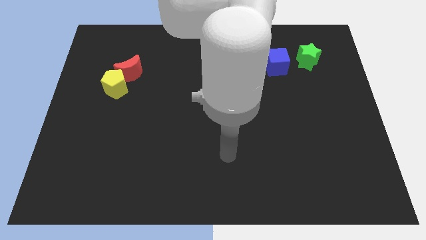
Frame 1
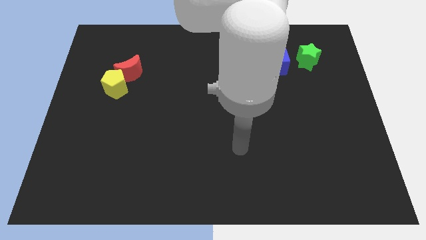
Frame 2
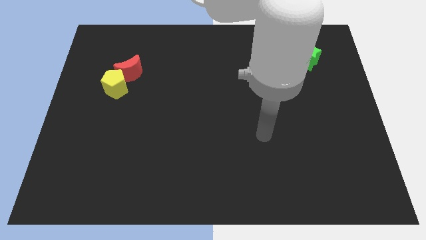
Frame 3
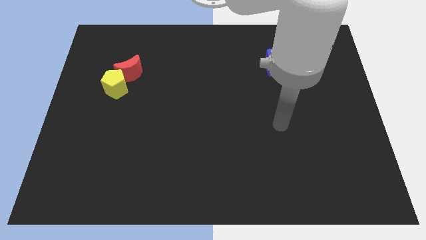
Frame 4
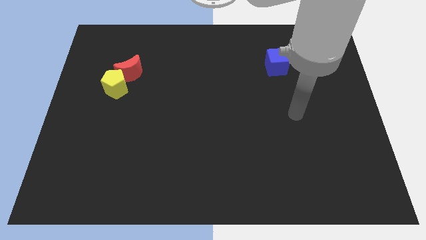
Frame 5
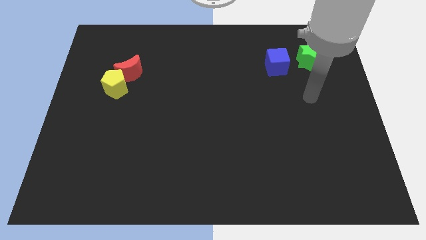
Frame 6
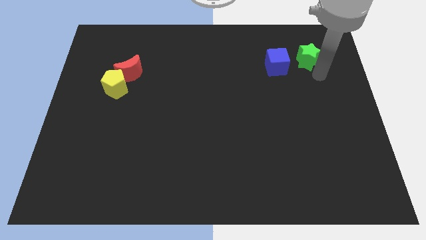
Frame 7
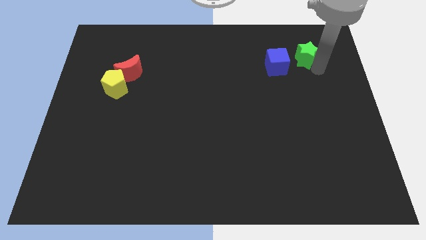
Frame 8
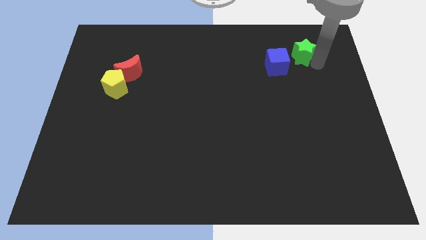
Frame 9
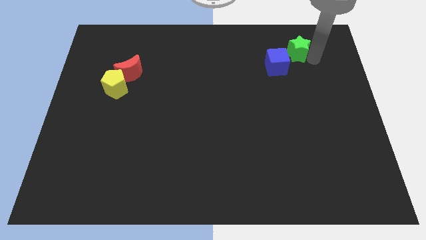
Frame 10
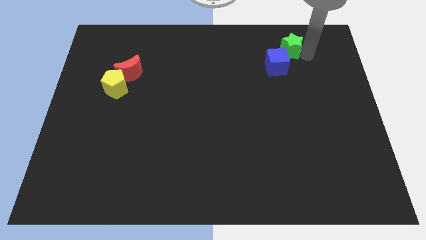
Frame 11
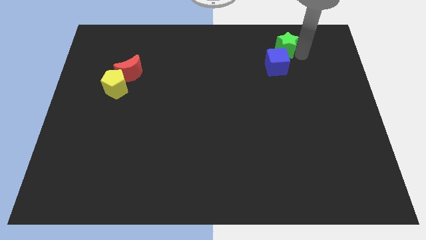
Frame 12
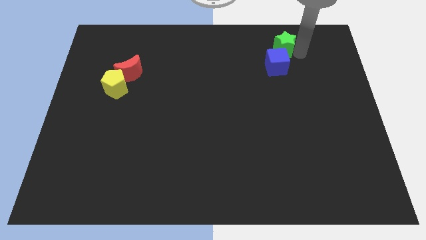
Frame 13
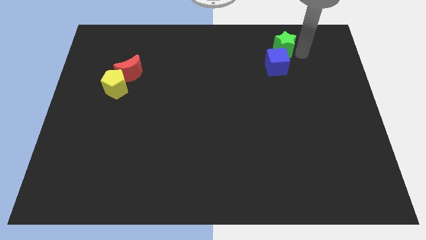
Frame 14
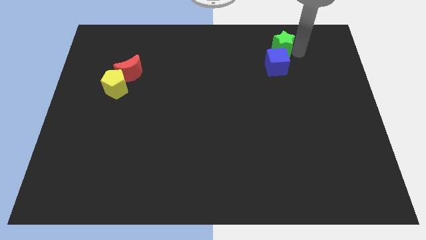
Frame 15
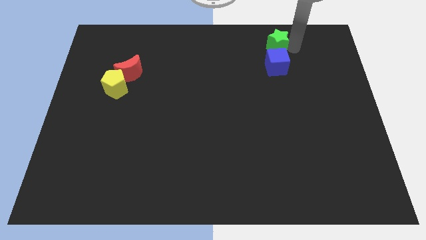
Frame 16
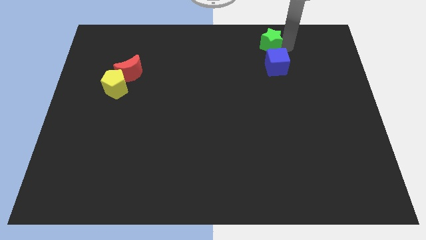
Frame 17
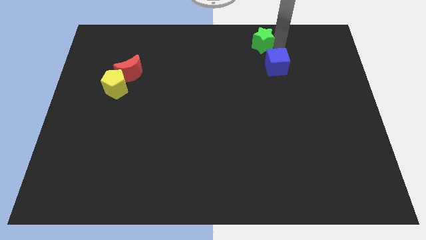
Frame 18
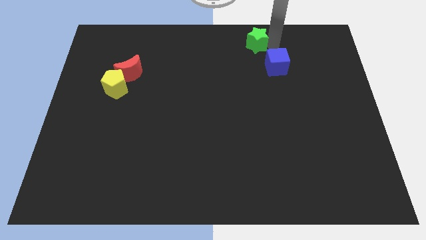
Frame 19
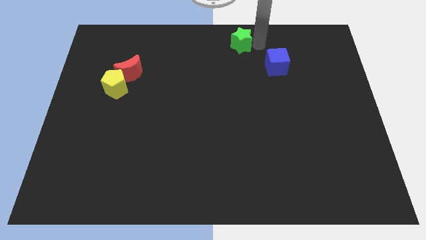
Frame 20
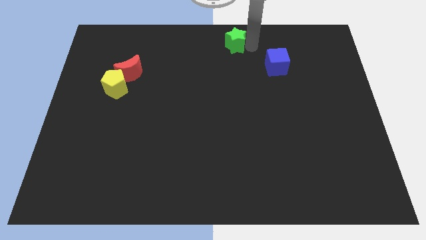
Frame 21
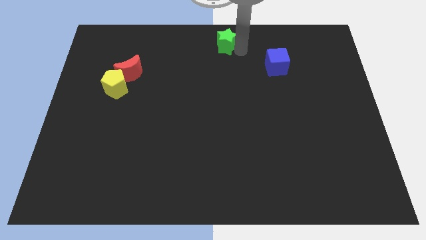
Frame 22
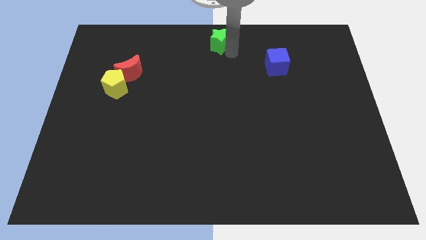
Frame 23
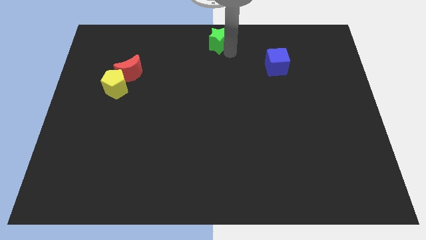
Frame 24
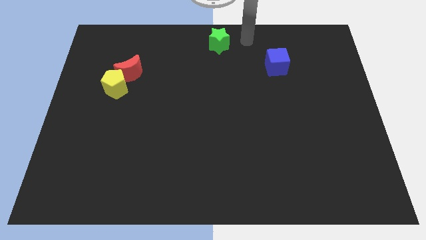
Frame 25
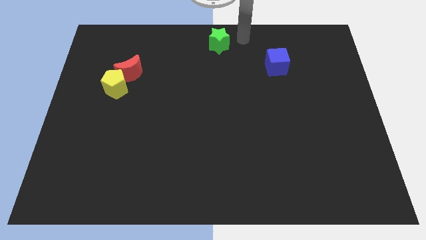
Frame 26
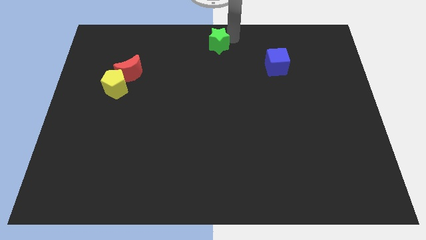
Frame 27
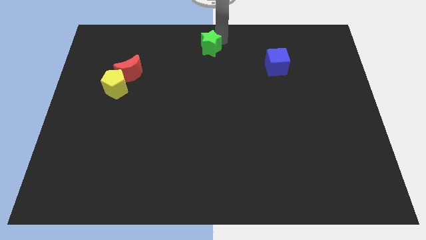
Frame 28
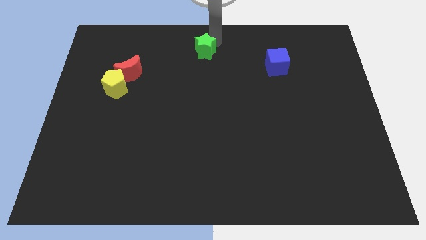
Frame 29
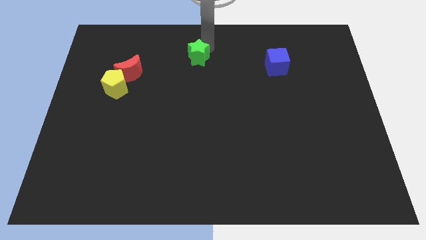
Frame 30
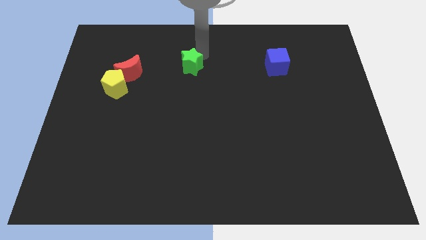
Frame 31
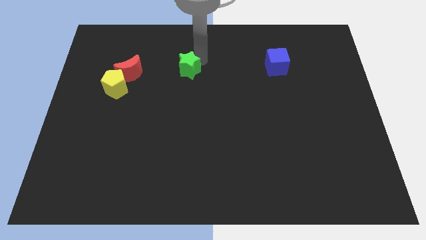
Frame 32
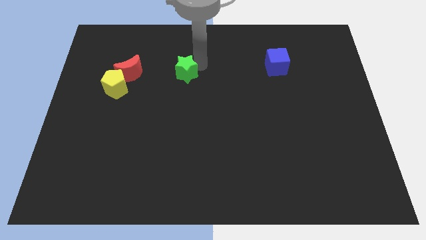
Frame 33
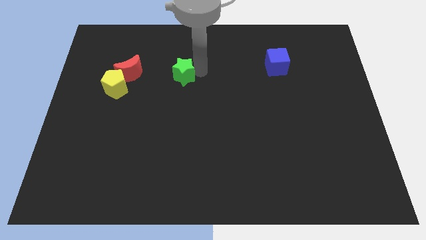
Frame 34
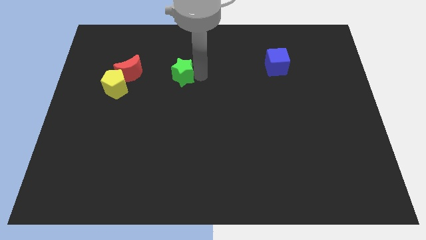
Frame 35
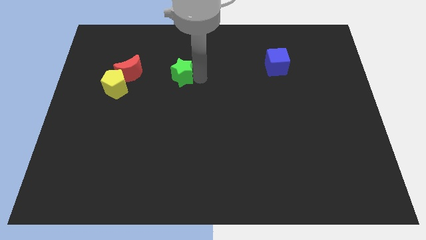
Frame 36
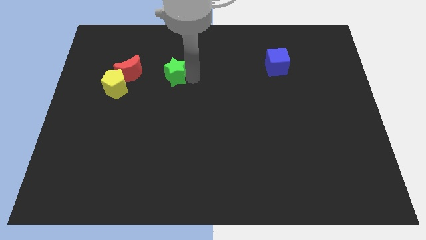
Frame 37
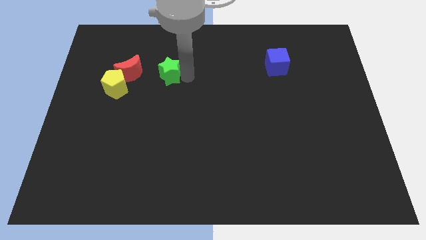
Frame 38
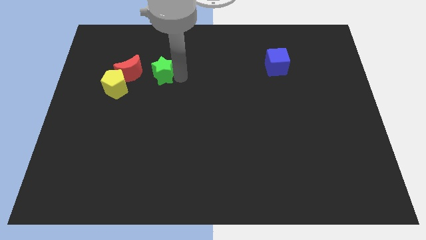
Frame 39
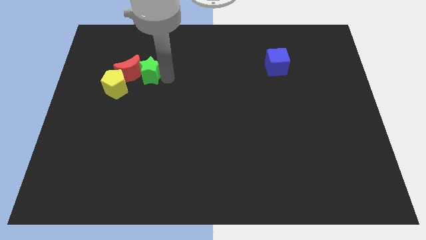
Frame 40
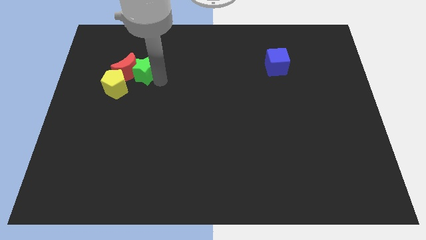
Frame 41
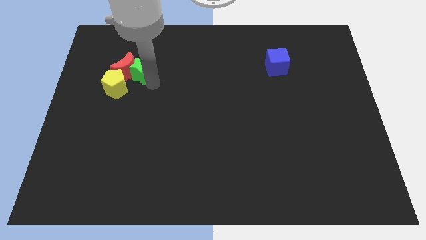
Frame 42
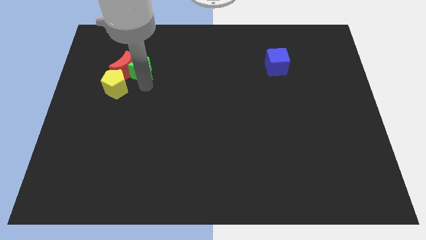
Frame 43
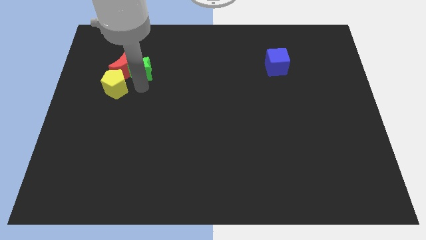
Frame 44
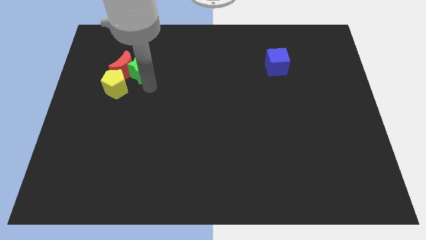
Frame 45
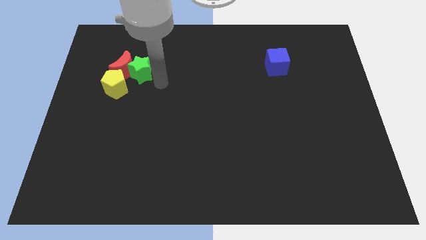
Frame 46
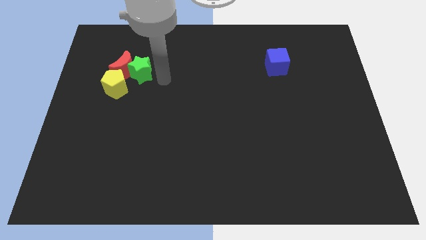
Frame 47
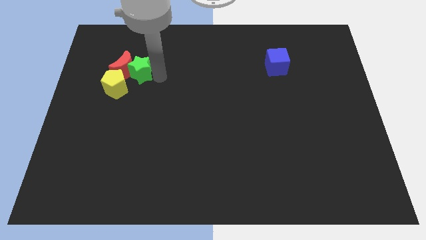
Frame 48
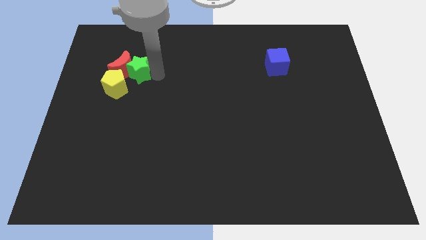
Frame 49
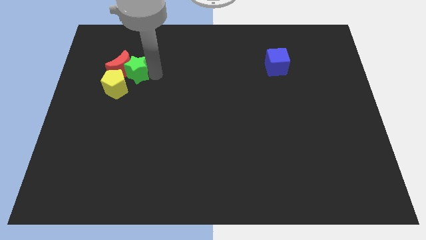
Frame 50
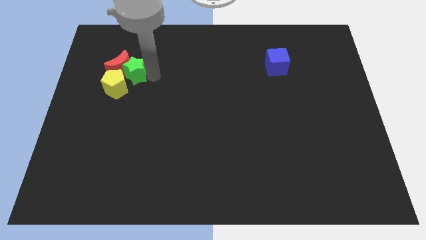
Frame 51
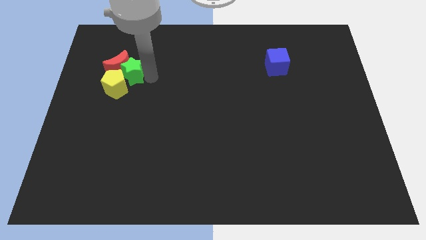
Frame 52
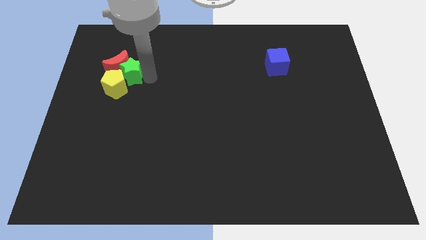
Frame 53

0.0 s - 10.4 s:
move the green block next to the yellow pentagon

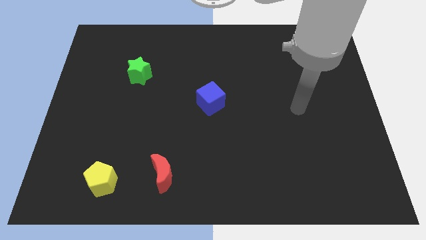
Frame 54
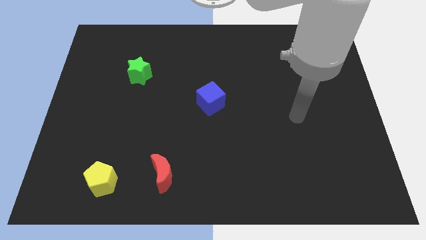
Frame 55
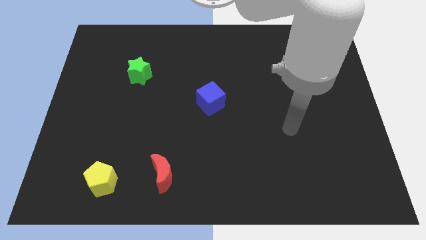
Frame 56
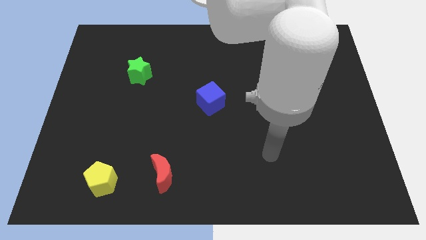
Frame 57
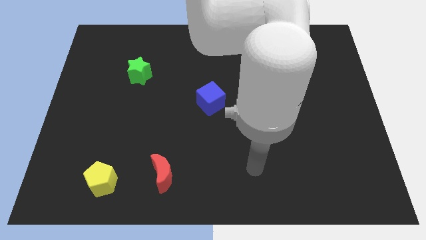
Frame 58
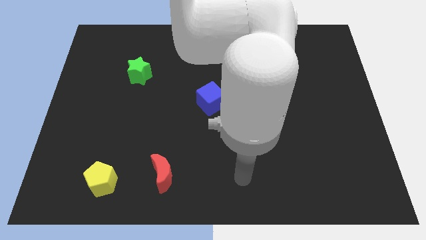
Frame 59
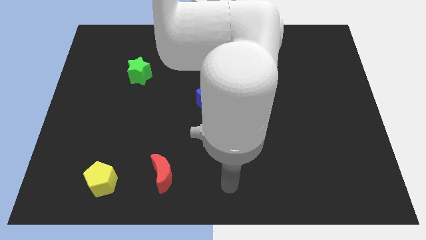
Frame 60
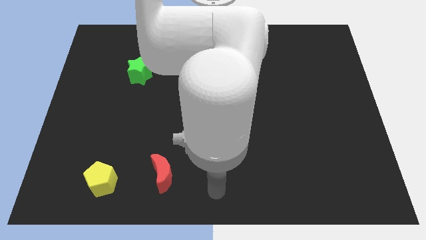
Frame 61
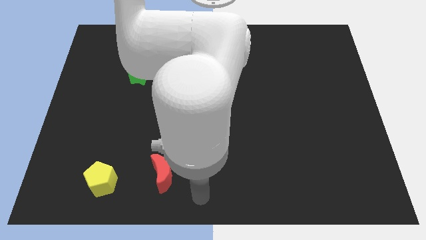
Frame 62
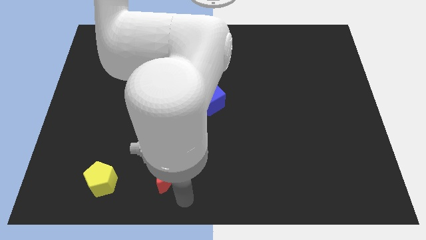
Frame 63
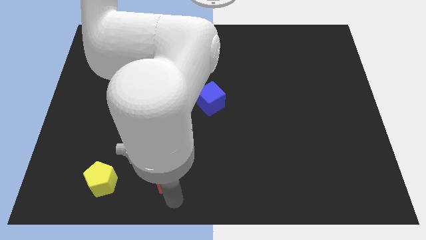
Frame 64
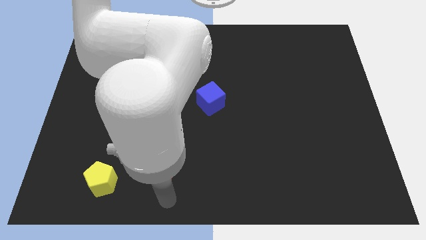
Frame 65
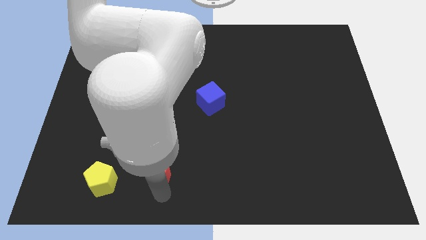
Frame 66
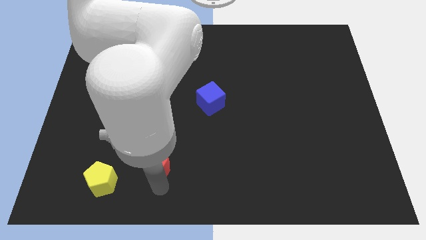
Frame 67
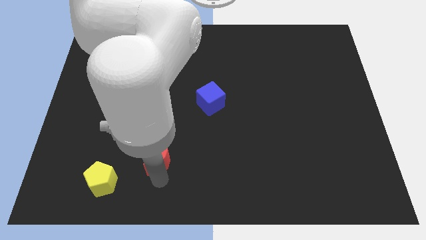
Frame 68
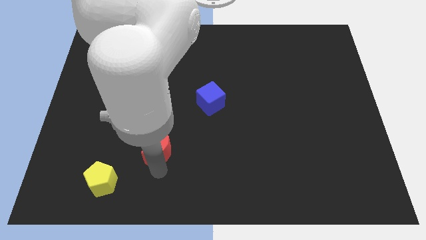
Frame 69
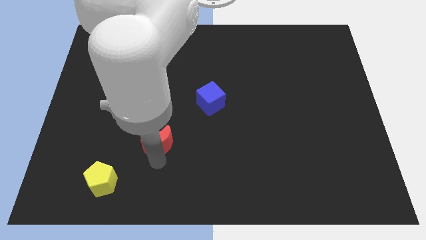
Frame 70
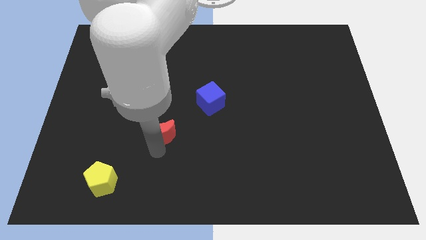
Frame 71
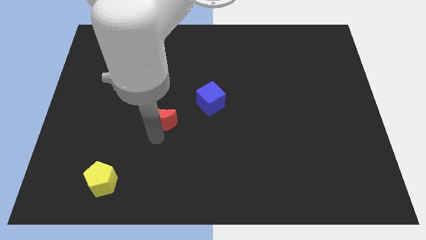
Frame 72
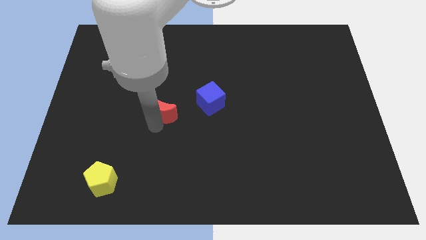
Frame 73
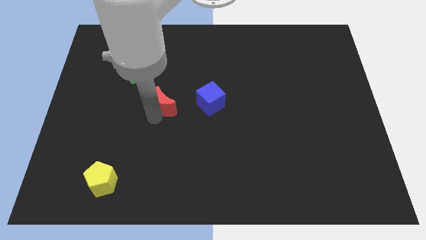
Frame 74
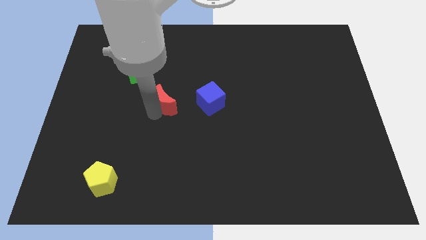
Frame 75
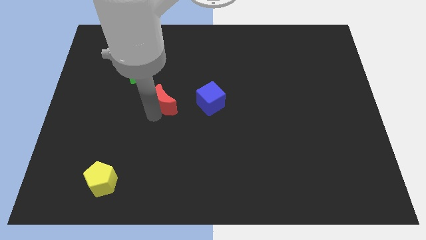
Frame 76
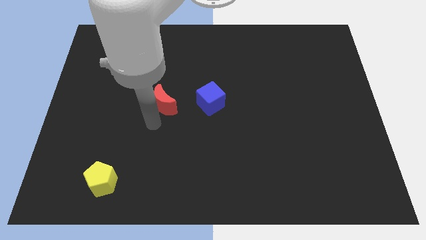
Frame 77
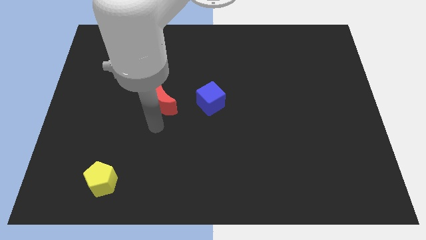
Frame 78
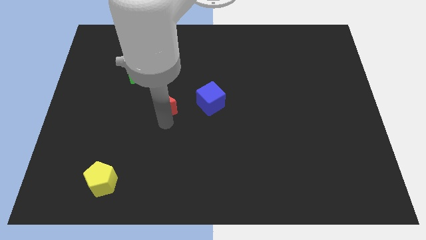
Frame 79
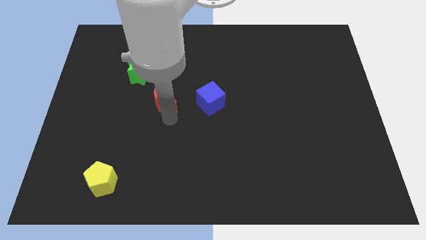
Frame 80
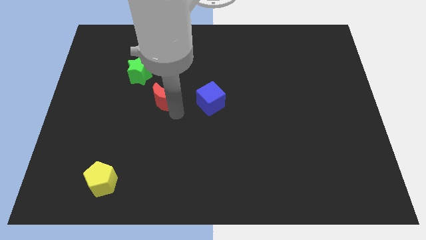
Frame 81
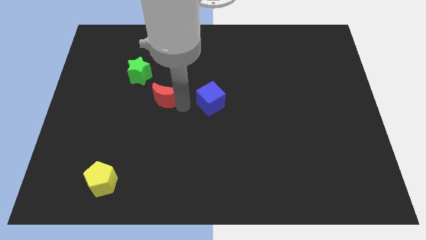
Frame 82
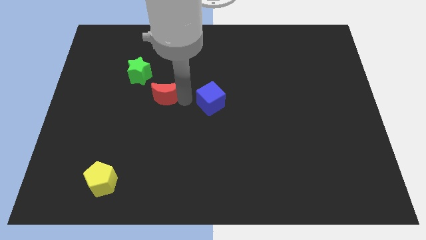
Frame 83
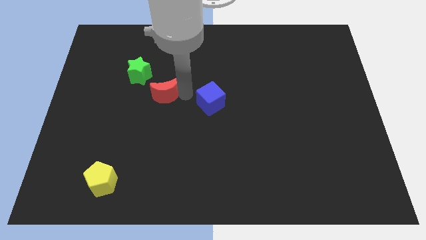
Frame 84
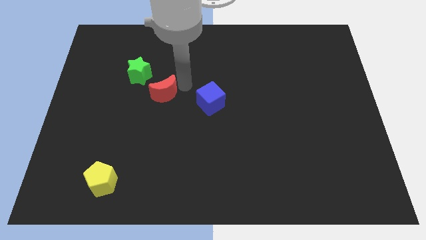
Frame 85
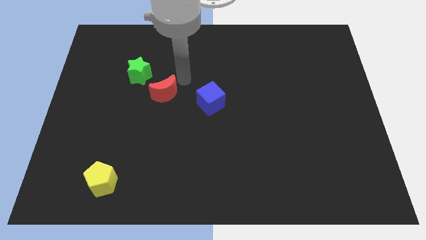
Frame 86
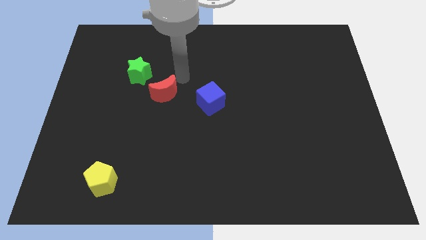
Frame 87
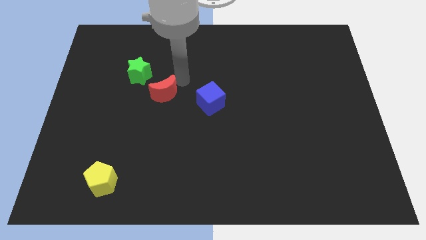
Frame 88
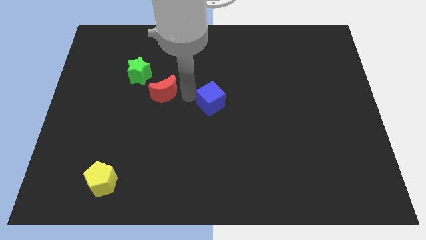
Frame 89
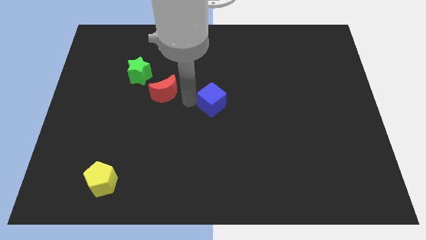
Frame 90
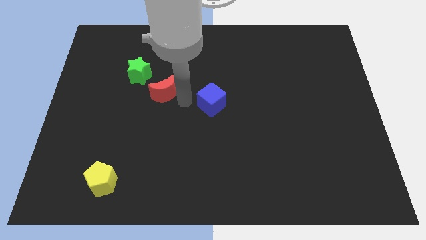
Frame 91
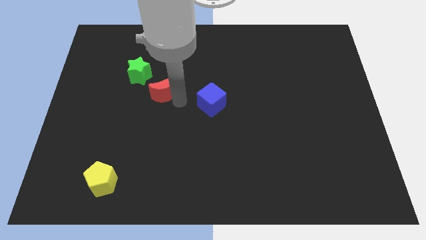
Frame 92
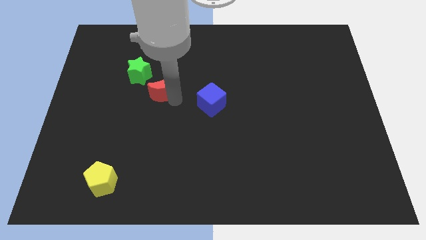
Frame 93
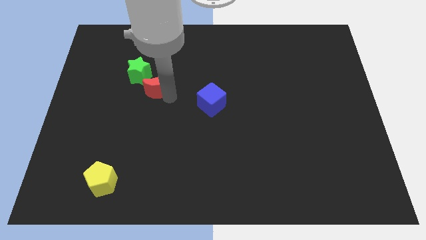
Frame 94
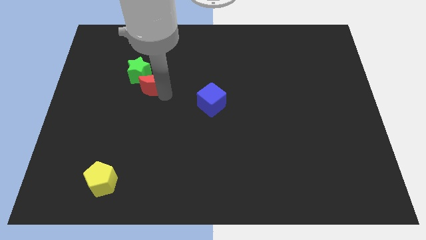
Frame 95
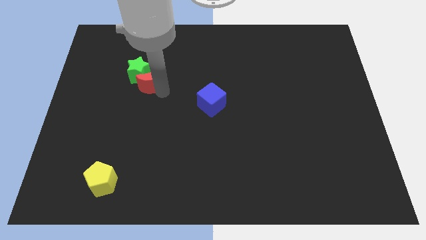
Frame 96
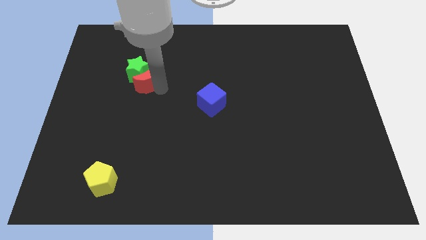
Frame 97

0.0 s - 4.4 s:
push the red block towards the green block
